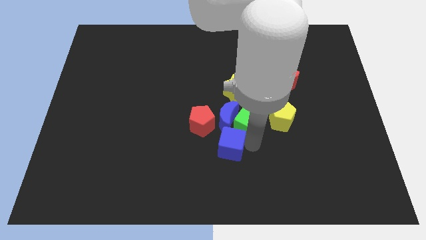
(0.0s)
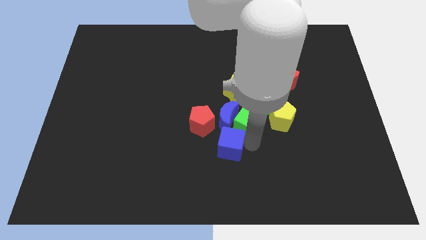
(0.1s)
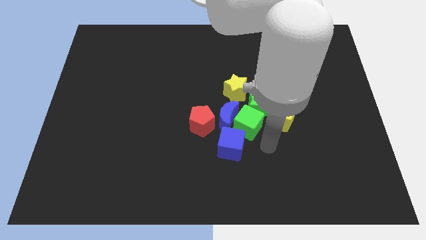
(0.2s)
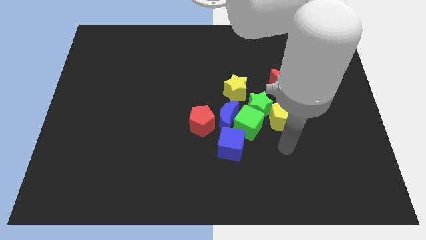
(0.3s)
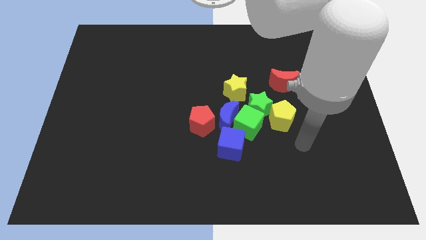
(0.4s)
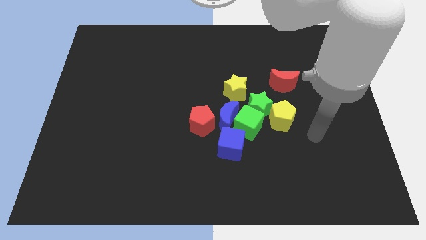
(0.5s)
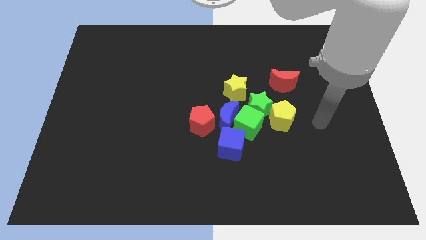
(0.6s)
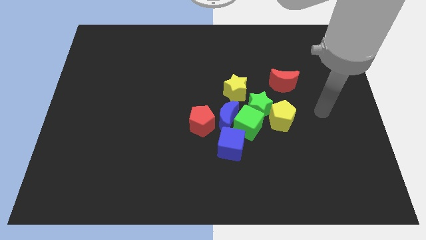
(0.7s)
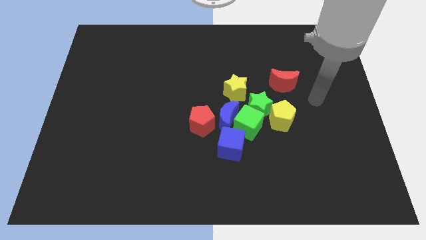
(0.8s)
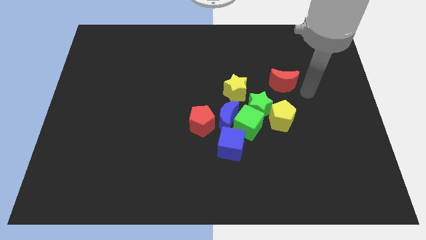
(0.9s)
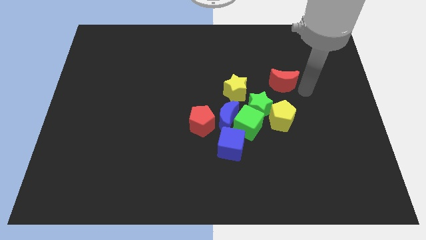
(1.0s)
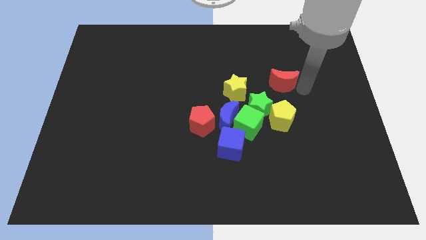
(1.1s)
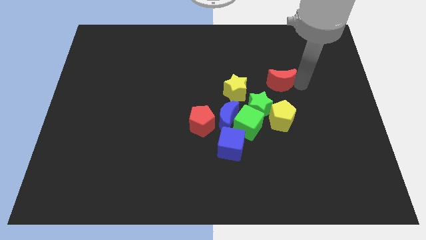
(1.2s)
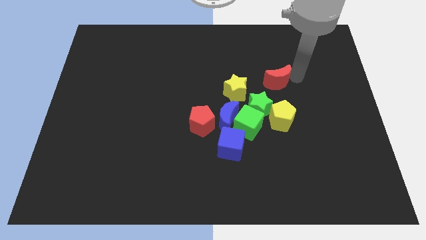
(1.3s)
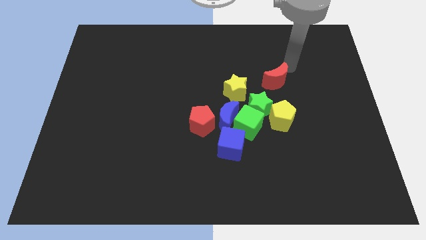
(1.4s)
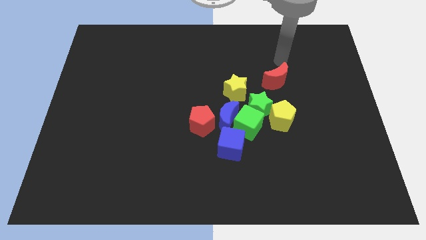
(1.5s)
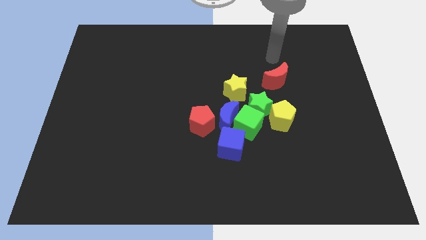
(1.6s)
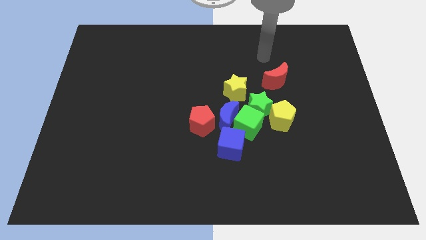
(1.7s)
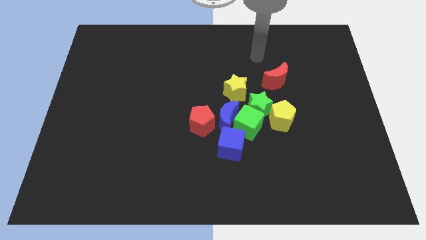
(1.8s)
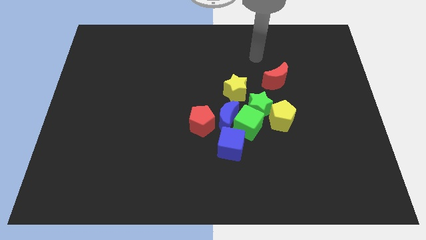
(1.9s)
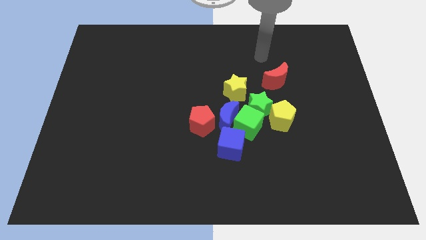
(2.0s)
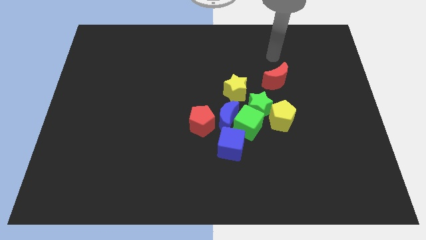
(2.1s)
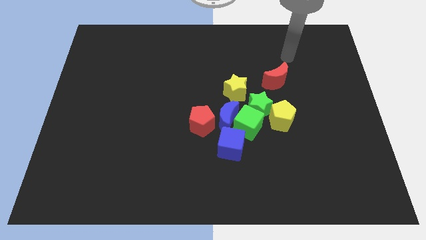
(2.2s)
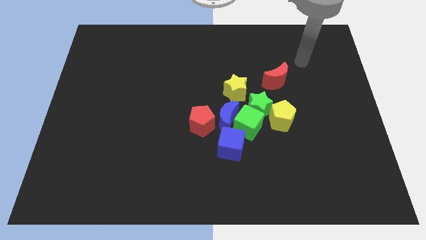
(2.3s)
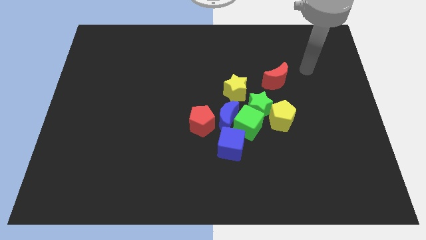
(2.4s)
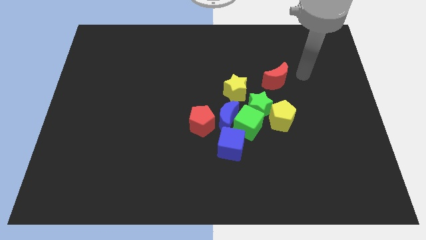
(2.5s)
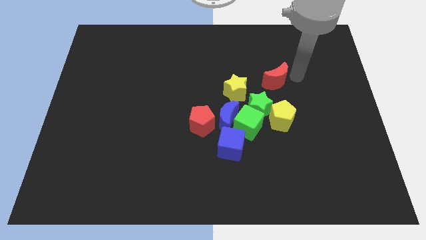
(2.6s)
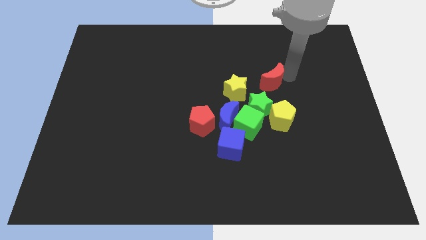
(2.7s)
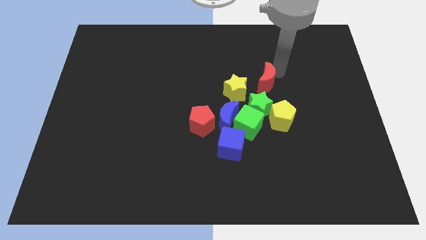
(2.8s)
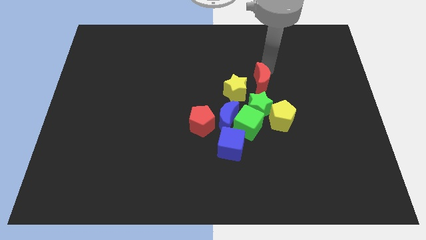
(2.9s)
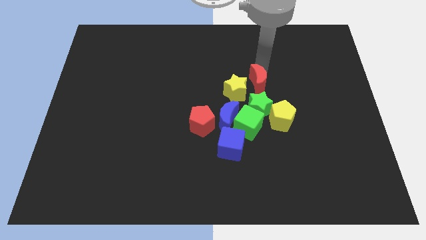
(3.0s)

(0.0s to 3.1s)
push the red moon slightly downwards

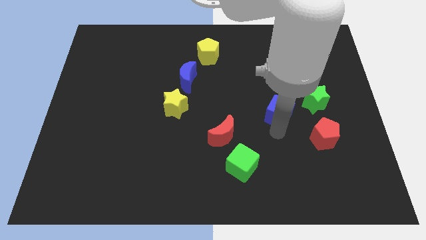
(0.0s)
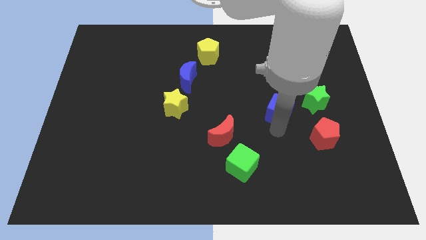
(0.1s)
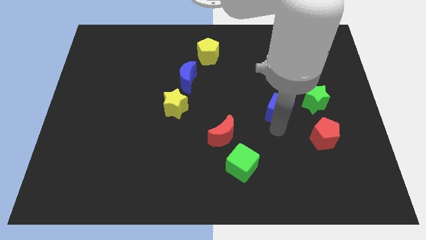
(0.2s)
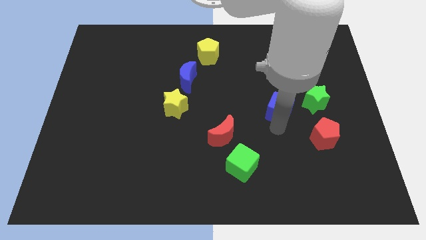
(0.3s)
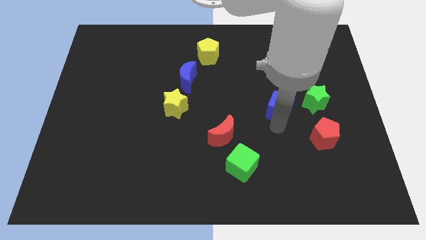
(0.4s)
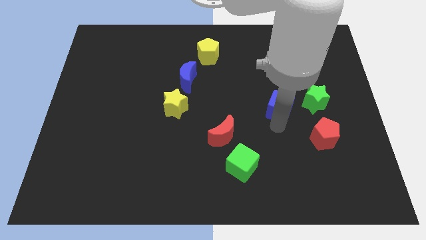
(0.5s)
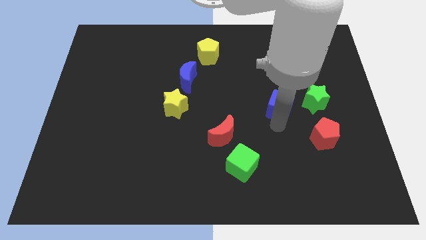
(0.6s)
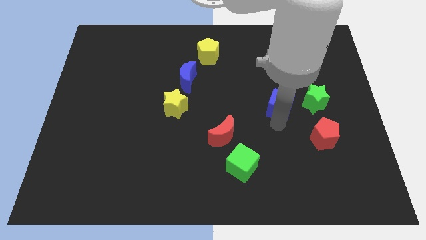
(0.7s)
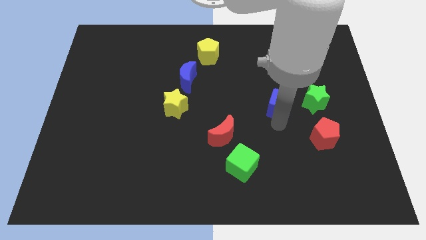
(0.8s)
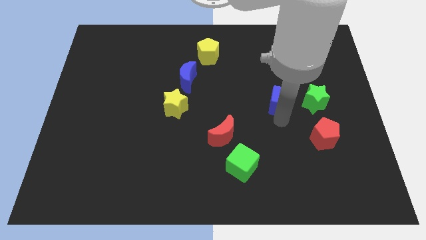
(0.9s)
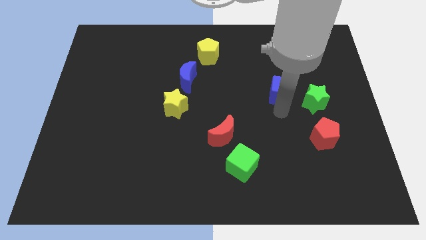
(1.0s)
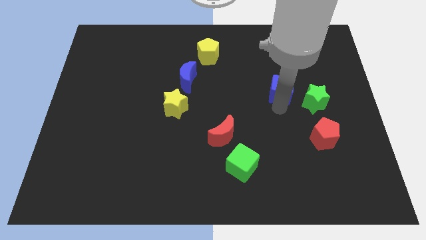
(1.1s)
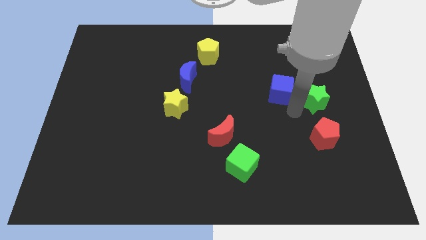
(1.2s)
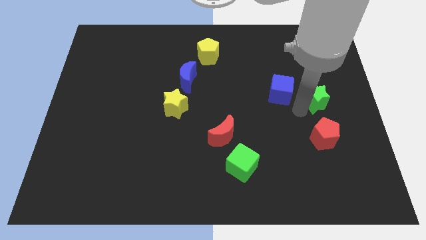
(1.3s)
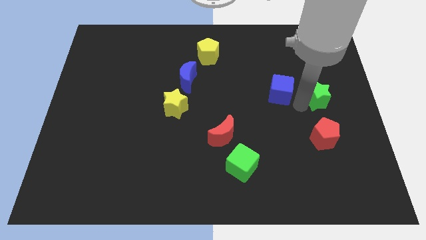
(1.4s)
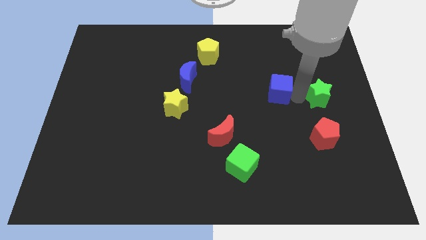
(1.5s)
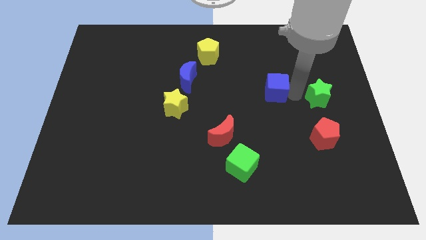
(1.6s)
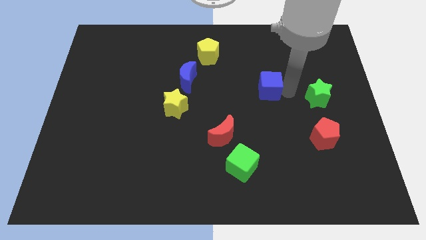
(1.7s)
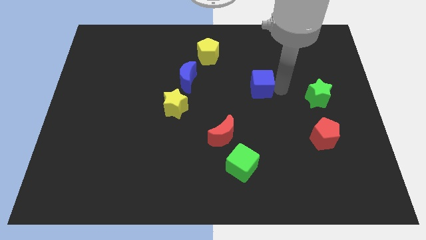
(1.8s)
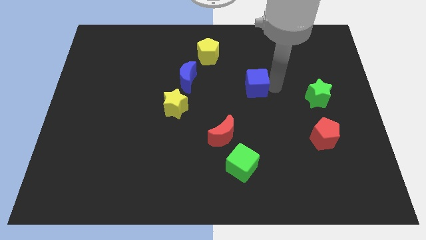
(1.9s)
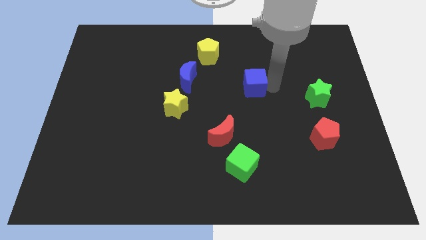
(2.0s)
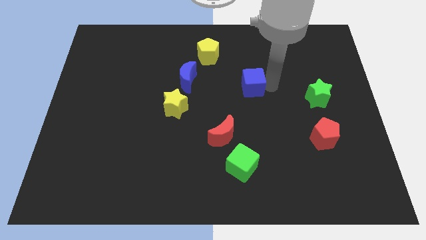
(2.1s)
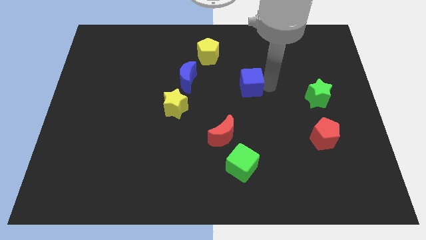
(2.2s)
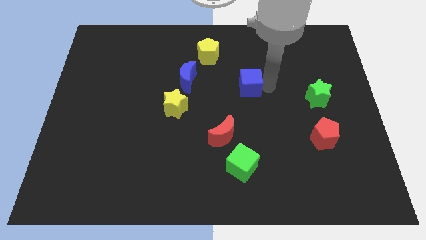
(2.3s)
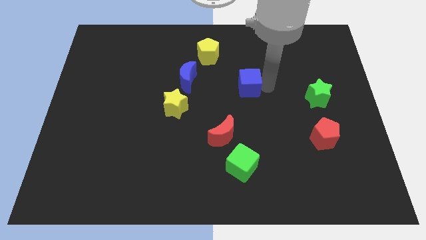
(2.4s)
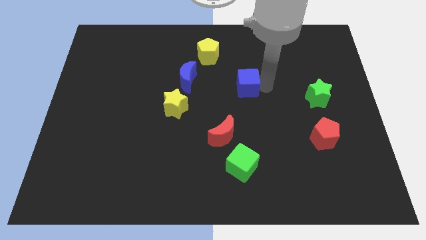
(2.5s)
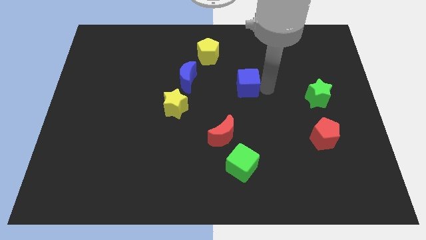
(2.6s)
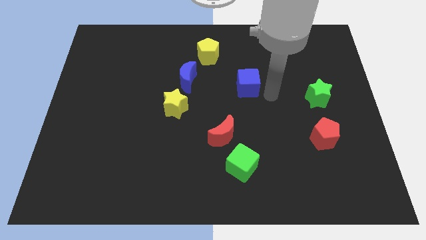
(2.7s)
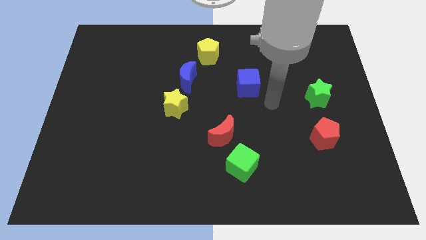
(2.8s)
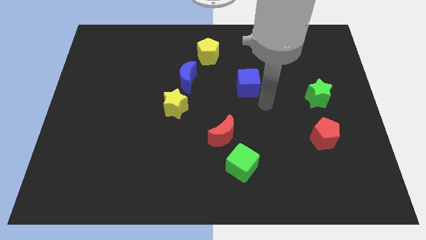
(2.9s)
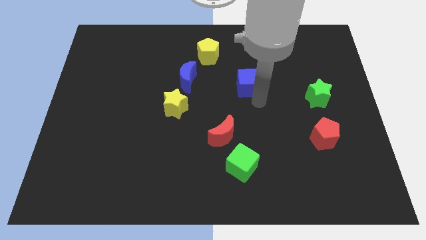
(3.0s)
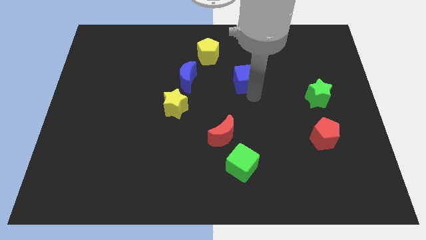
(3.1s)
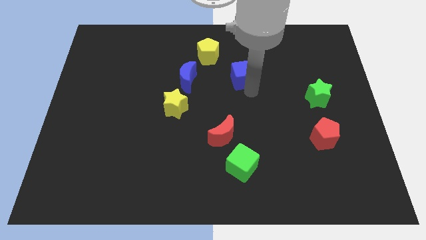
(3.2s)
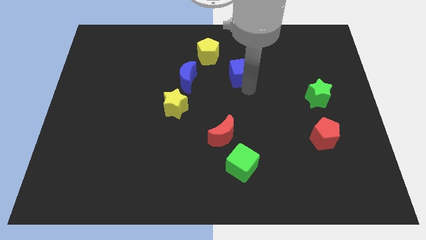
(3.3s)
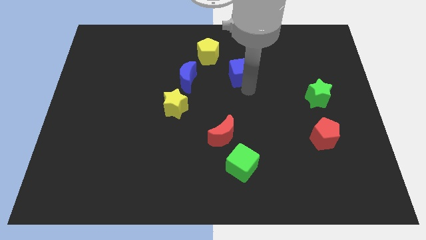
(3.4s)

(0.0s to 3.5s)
place the blue cube horizontally to the right side of blue moon

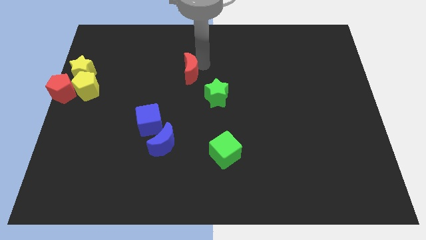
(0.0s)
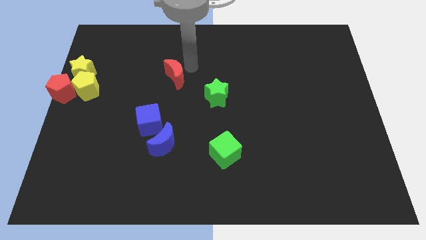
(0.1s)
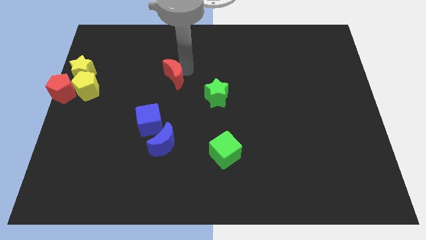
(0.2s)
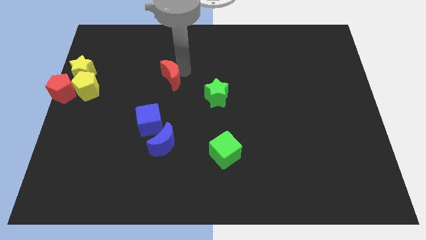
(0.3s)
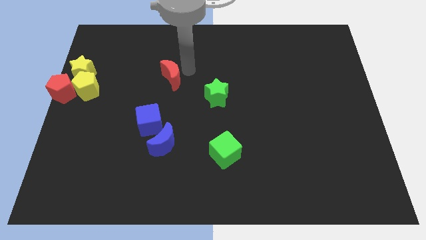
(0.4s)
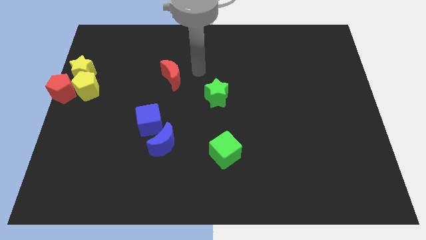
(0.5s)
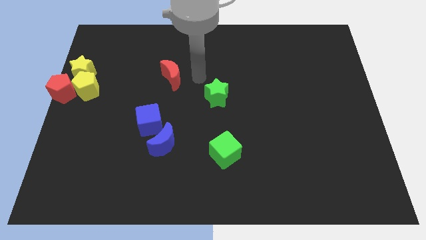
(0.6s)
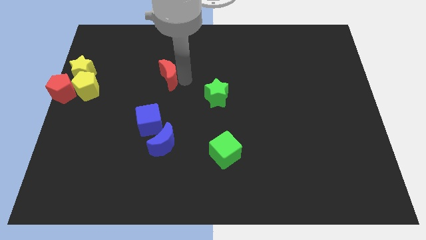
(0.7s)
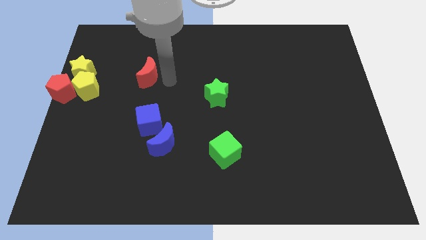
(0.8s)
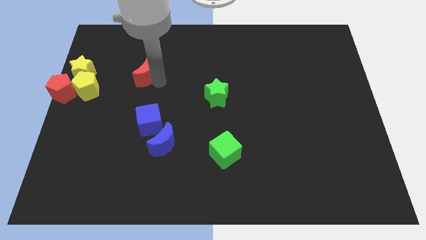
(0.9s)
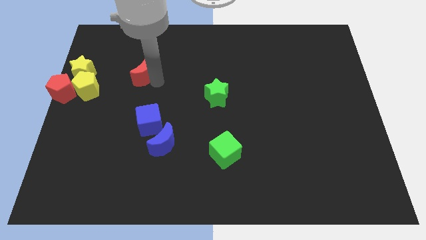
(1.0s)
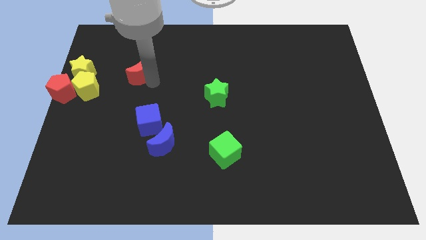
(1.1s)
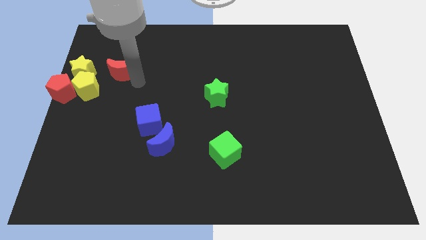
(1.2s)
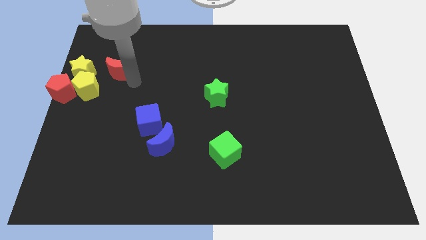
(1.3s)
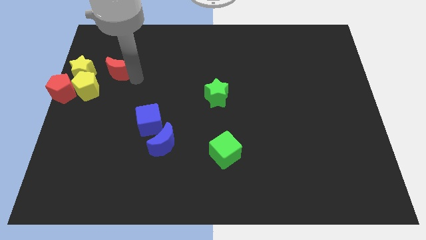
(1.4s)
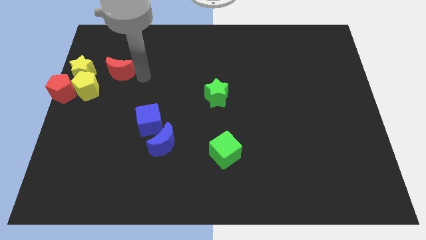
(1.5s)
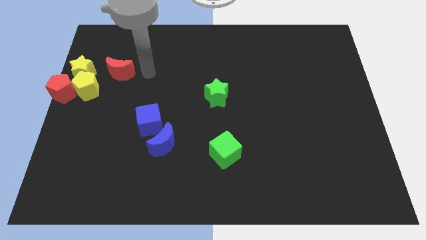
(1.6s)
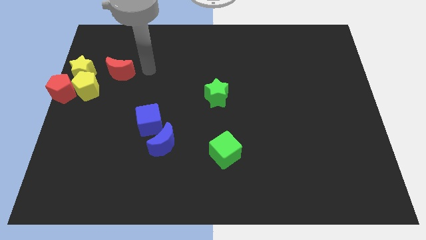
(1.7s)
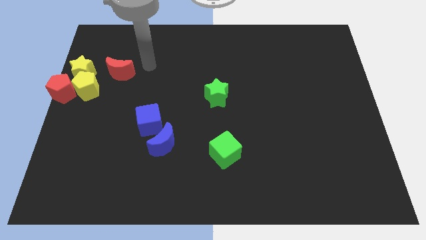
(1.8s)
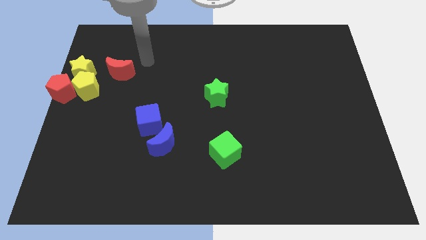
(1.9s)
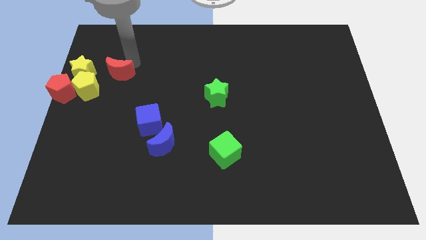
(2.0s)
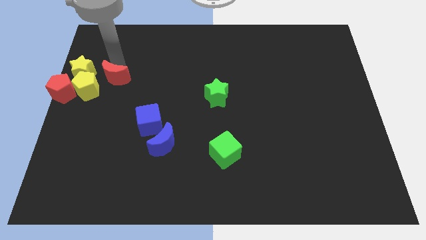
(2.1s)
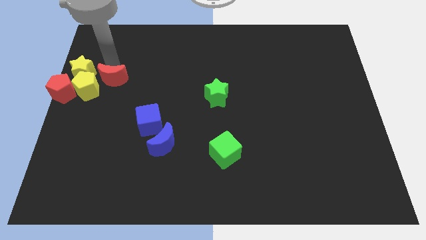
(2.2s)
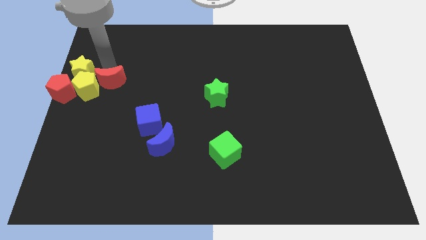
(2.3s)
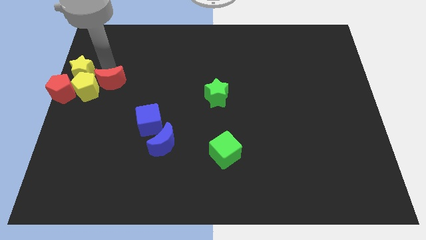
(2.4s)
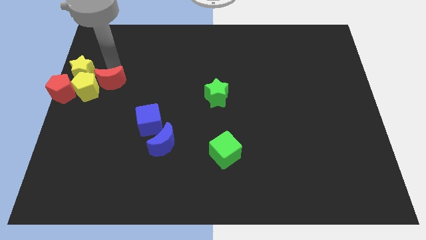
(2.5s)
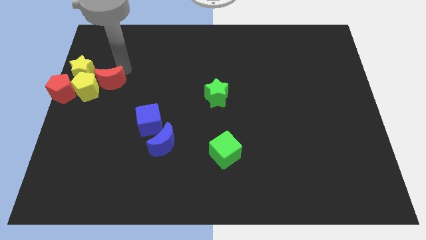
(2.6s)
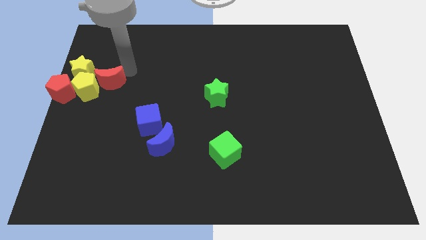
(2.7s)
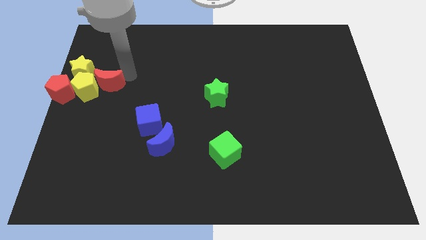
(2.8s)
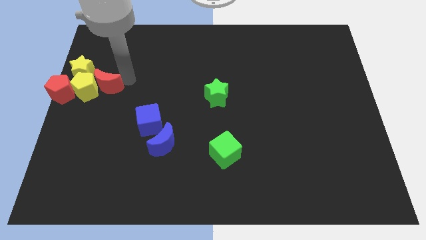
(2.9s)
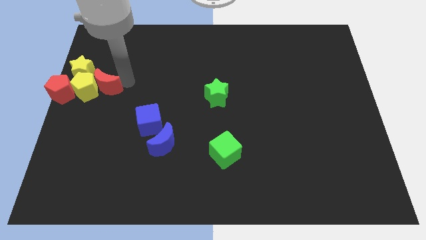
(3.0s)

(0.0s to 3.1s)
push red moon into yellow pentagon
